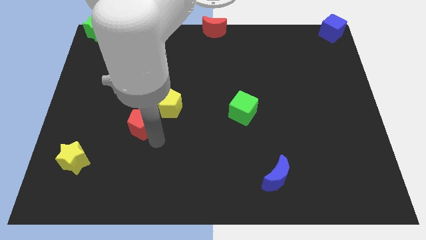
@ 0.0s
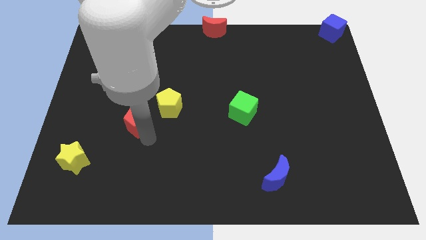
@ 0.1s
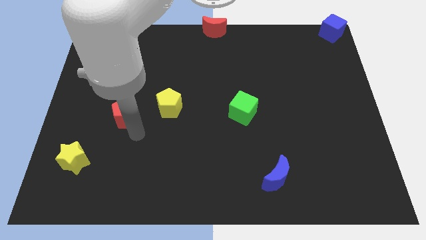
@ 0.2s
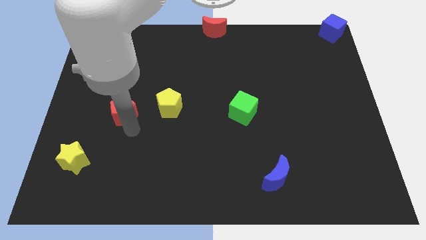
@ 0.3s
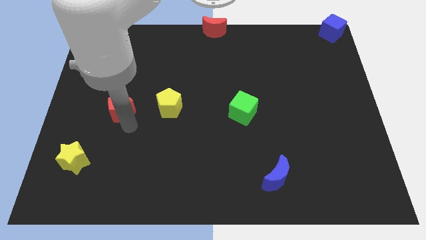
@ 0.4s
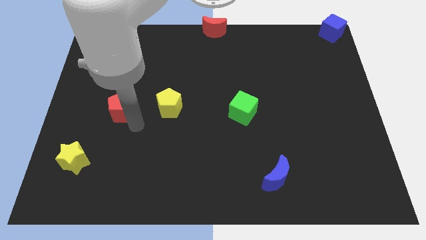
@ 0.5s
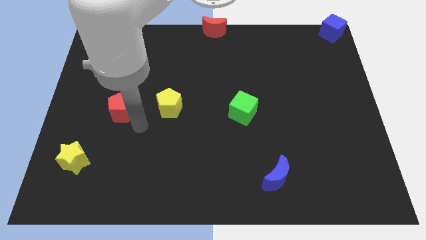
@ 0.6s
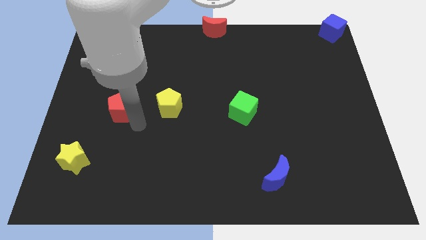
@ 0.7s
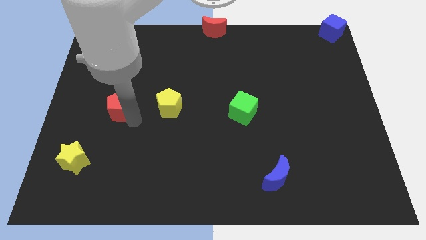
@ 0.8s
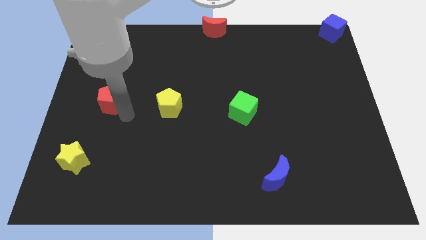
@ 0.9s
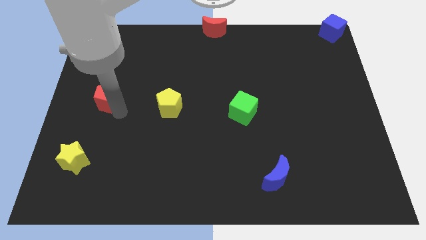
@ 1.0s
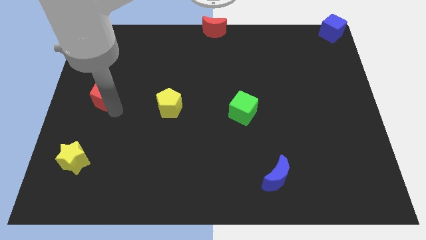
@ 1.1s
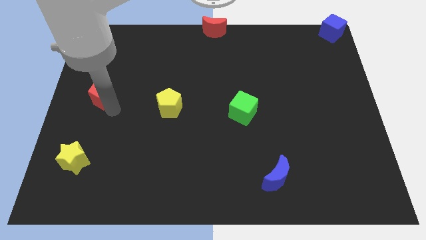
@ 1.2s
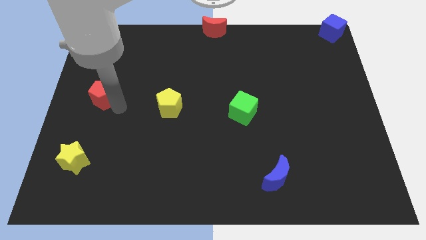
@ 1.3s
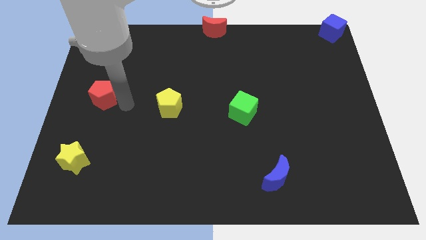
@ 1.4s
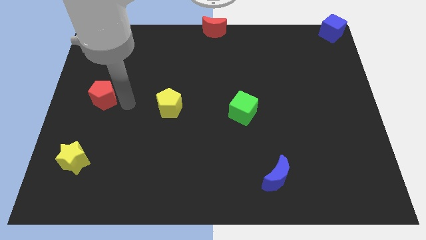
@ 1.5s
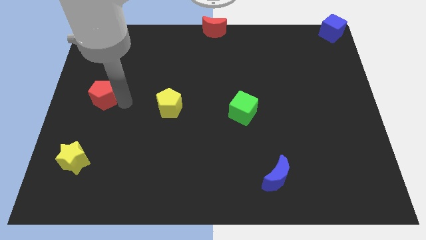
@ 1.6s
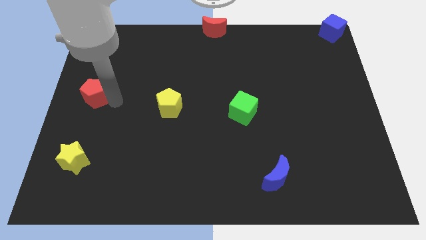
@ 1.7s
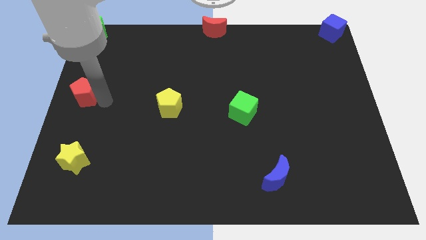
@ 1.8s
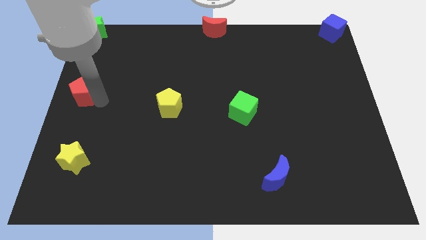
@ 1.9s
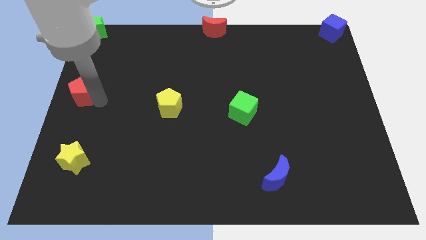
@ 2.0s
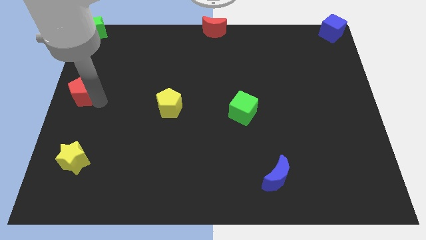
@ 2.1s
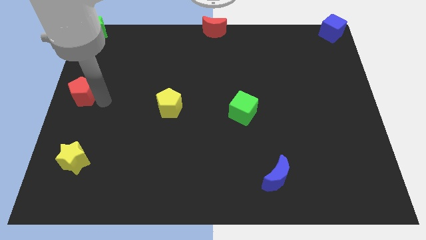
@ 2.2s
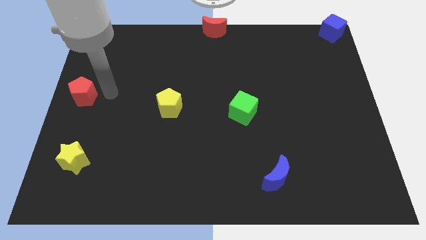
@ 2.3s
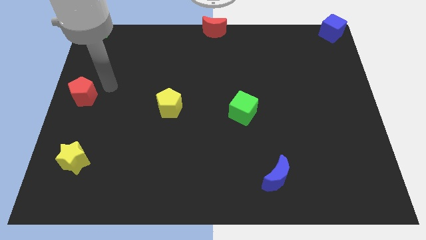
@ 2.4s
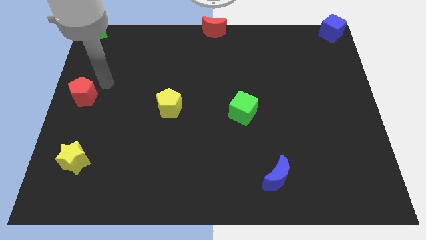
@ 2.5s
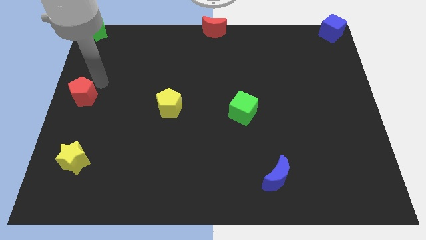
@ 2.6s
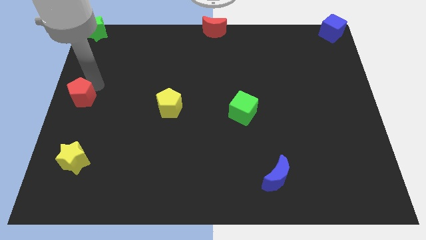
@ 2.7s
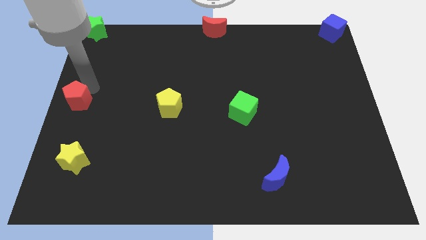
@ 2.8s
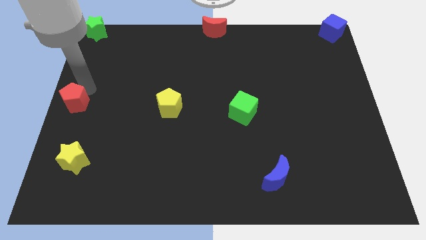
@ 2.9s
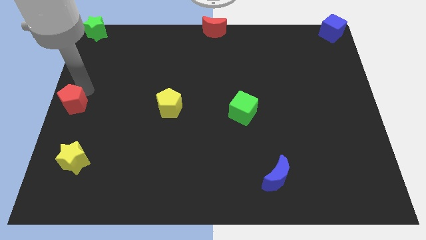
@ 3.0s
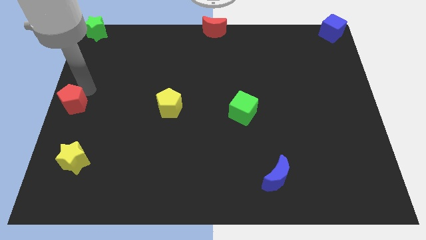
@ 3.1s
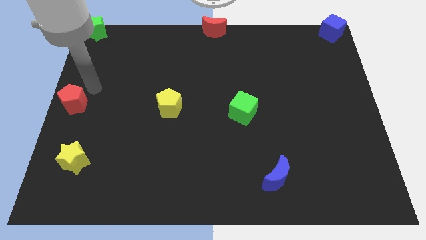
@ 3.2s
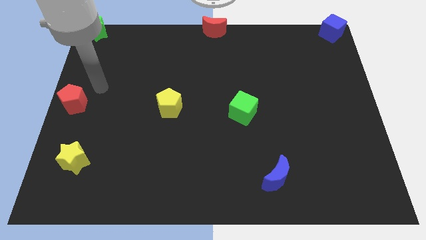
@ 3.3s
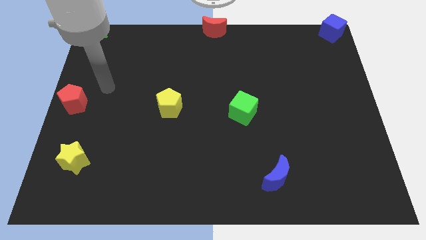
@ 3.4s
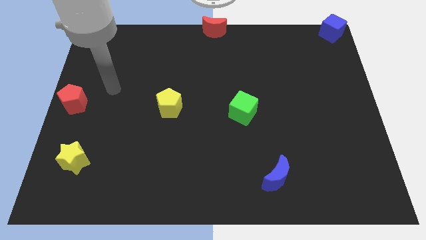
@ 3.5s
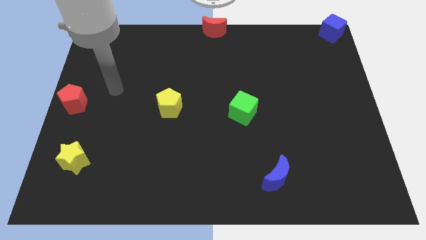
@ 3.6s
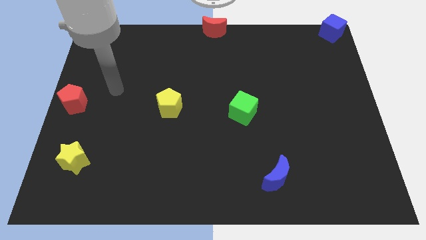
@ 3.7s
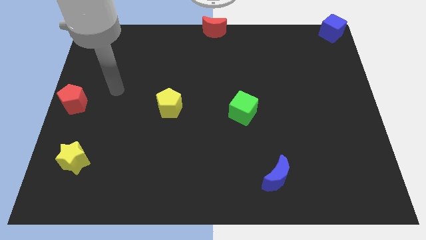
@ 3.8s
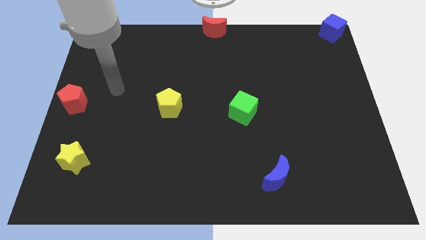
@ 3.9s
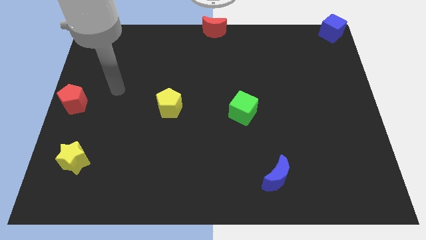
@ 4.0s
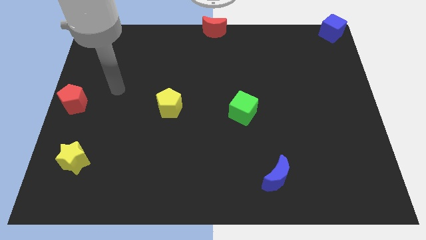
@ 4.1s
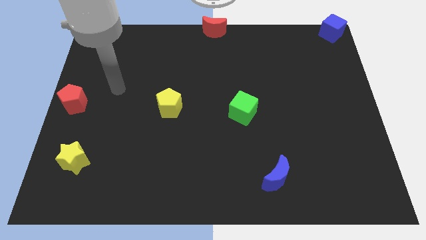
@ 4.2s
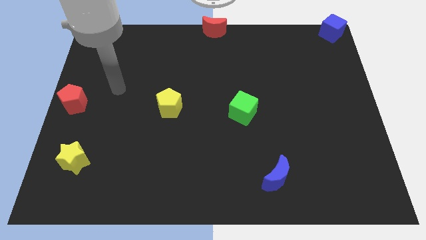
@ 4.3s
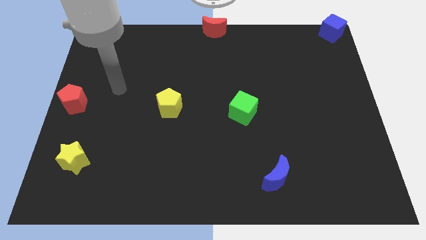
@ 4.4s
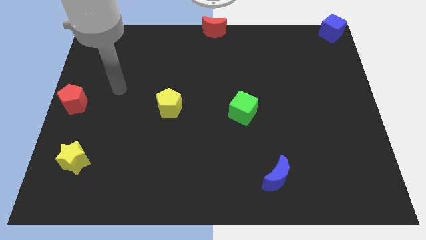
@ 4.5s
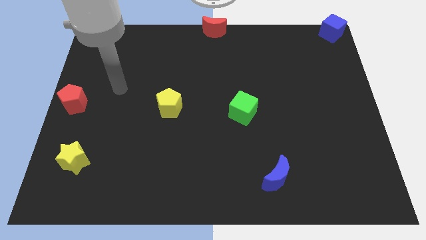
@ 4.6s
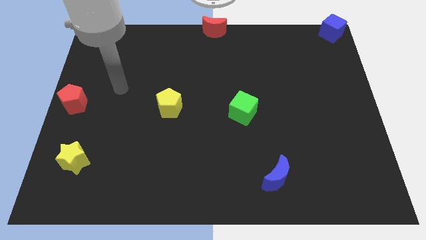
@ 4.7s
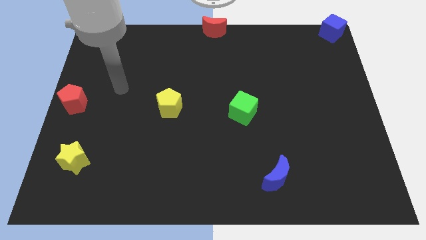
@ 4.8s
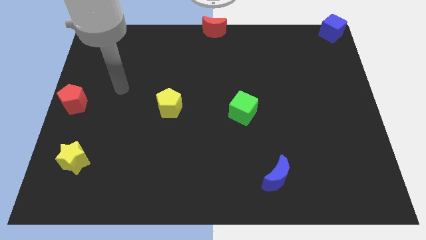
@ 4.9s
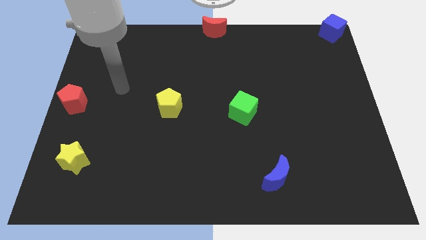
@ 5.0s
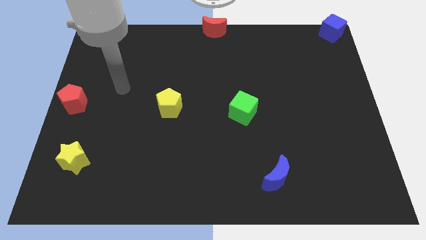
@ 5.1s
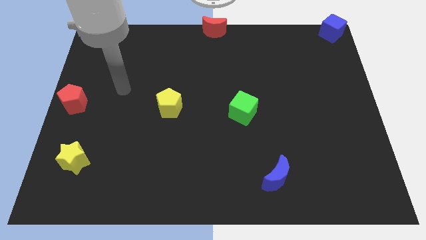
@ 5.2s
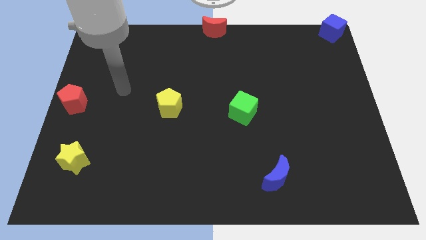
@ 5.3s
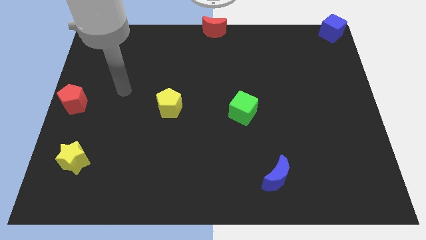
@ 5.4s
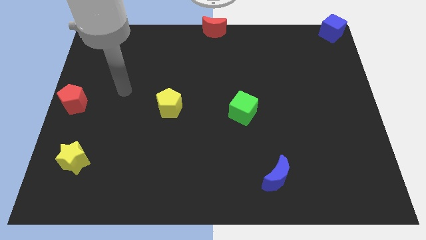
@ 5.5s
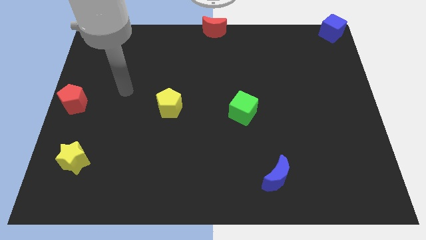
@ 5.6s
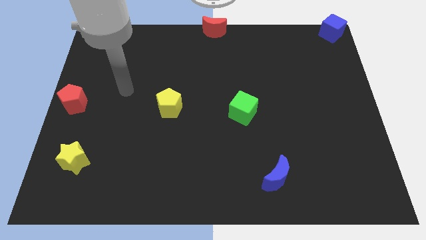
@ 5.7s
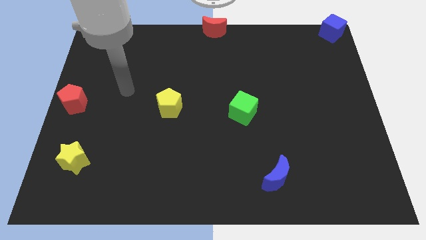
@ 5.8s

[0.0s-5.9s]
push the red pentagon to the left center of the board

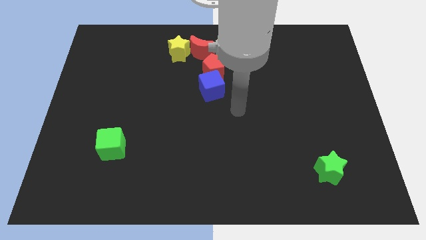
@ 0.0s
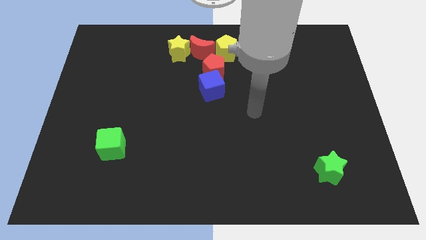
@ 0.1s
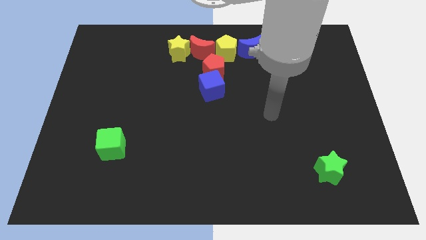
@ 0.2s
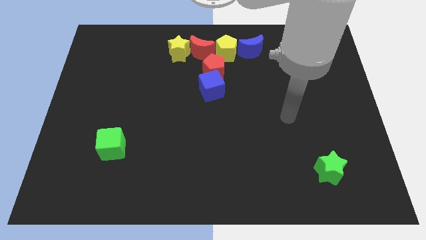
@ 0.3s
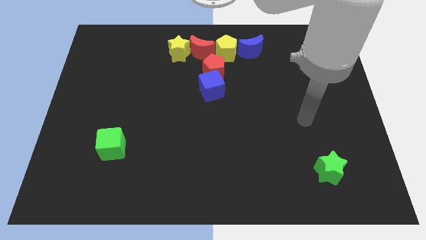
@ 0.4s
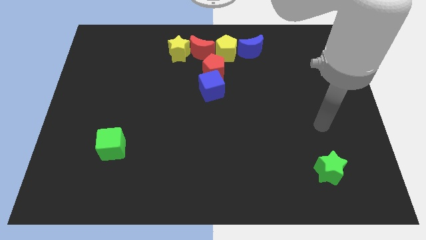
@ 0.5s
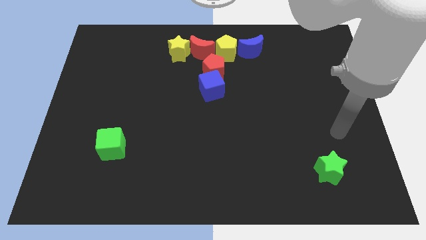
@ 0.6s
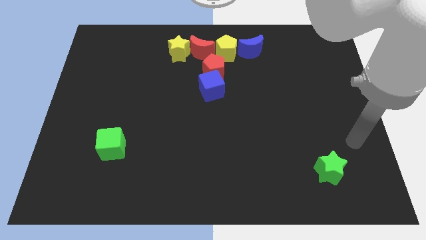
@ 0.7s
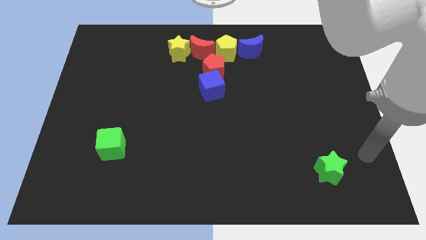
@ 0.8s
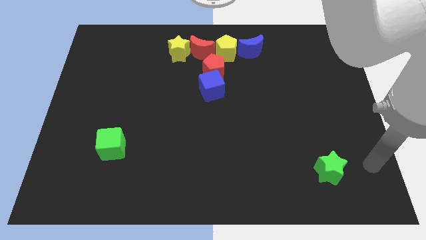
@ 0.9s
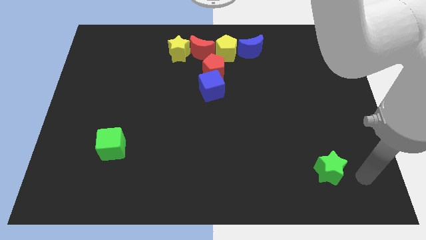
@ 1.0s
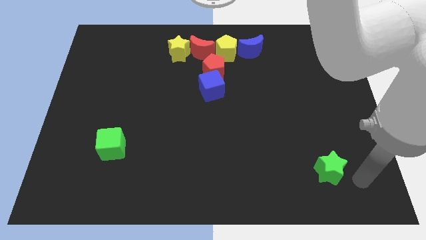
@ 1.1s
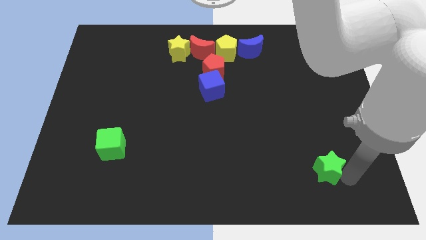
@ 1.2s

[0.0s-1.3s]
touch the green star on right

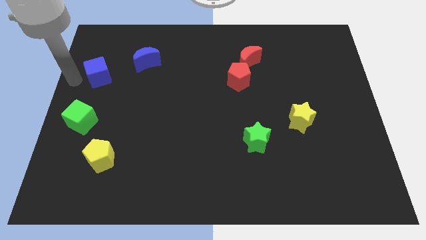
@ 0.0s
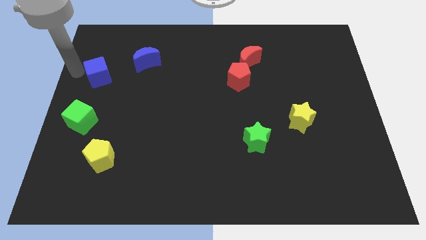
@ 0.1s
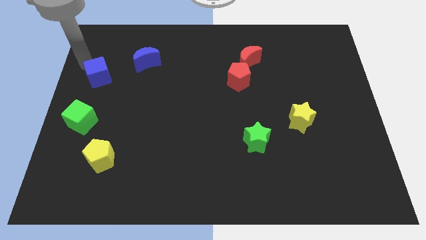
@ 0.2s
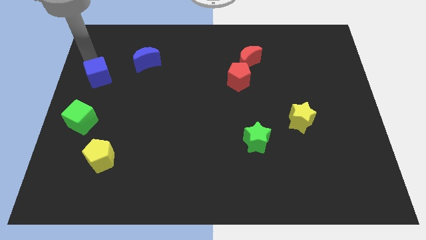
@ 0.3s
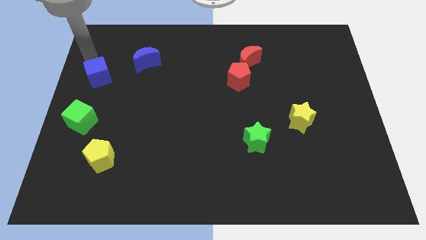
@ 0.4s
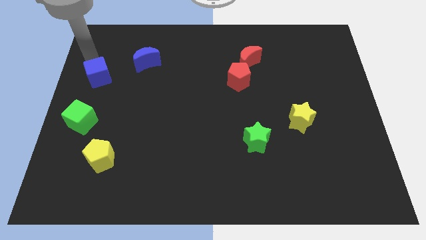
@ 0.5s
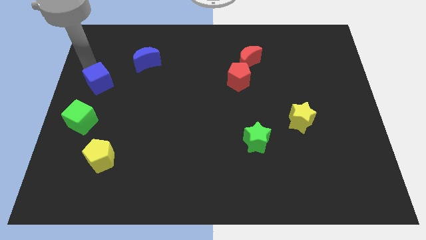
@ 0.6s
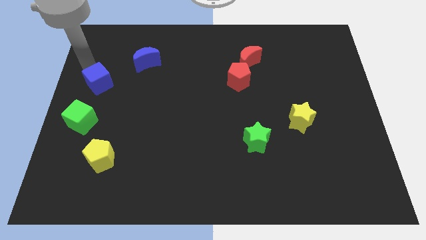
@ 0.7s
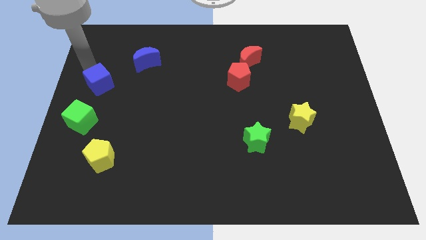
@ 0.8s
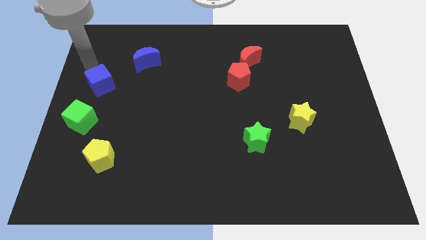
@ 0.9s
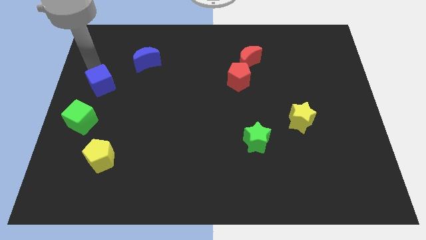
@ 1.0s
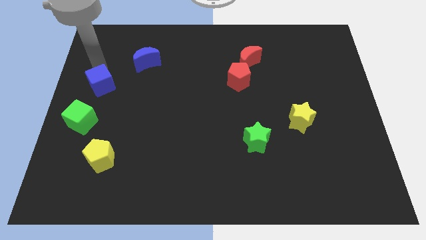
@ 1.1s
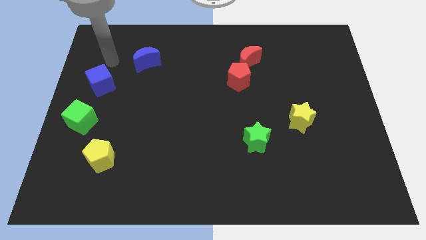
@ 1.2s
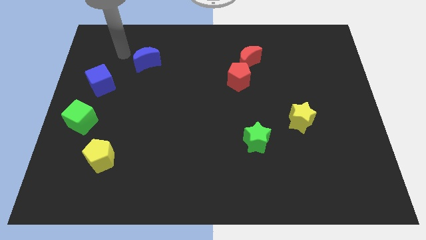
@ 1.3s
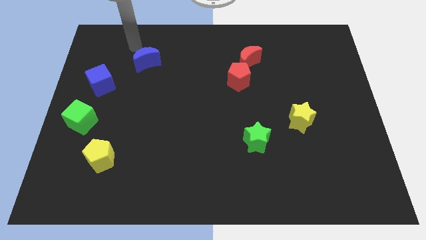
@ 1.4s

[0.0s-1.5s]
move the blue cube slightly to the left center of the board

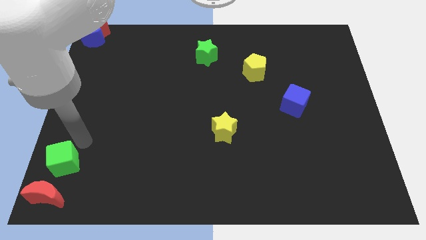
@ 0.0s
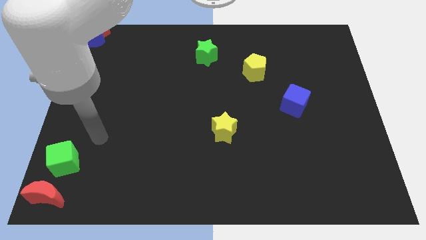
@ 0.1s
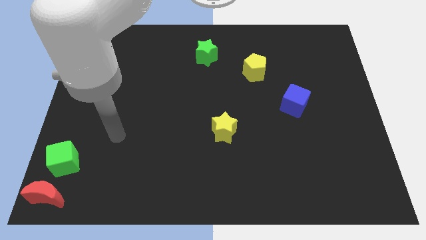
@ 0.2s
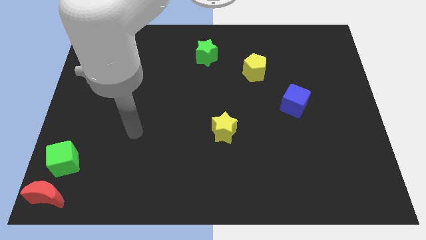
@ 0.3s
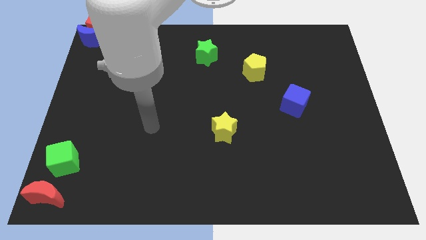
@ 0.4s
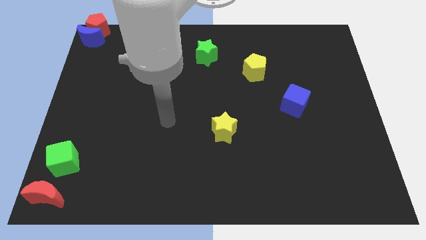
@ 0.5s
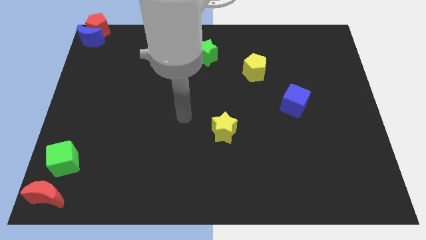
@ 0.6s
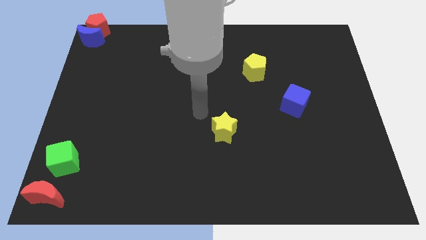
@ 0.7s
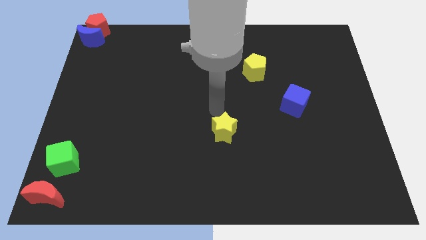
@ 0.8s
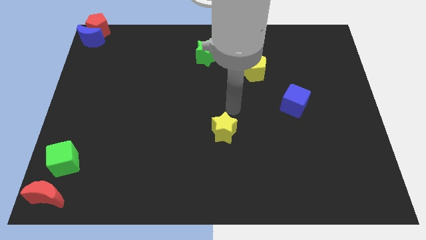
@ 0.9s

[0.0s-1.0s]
move your arm away from green cube
